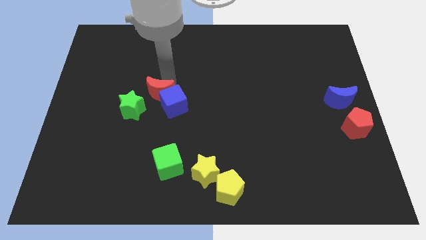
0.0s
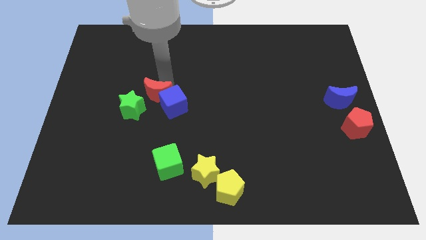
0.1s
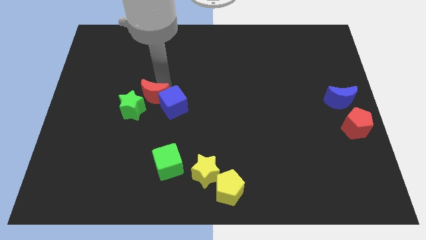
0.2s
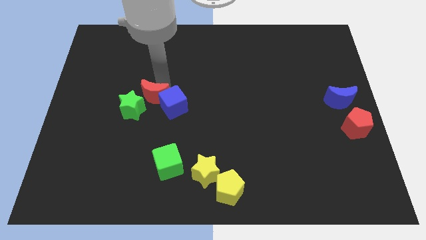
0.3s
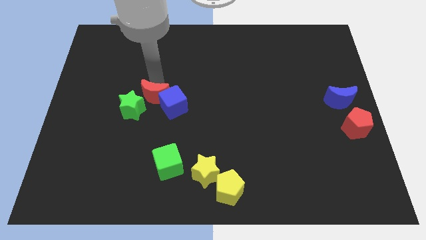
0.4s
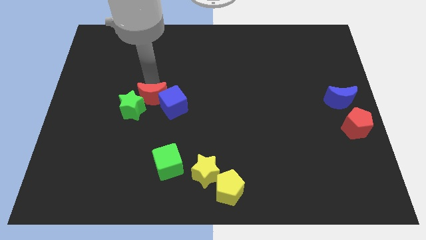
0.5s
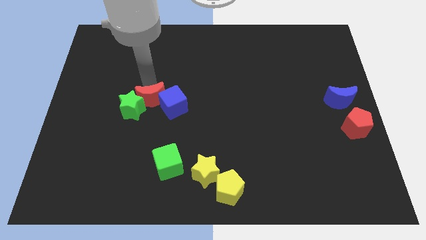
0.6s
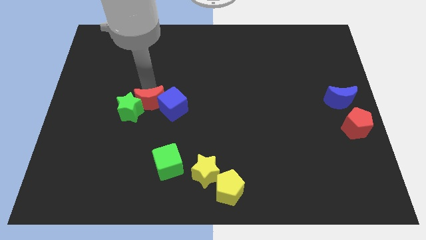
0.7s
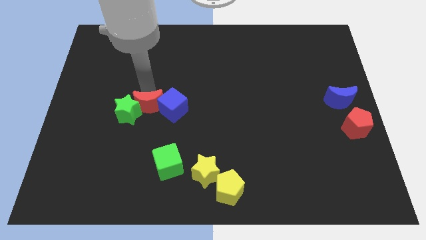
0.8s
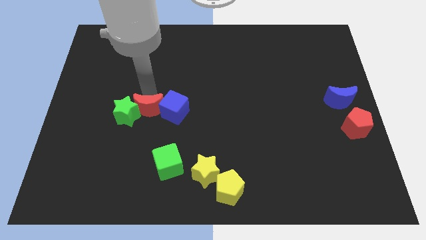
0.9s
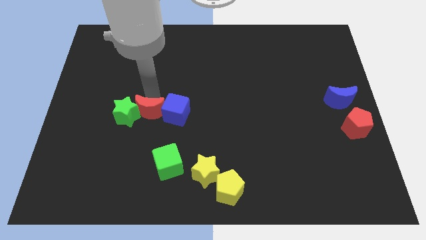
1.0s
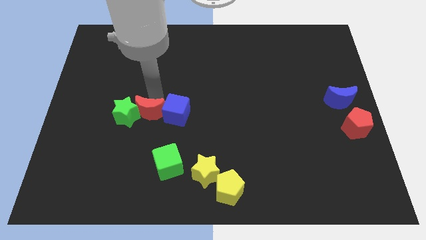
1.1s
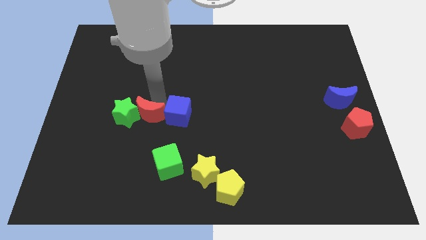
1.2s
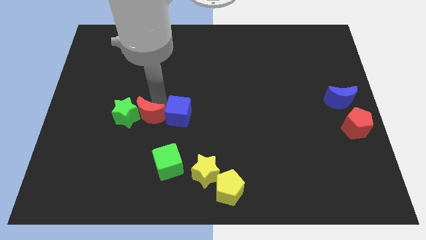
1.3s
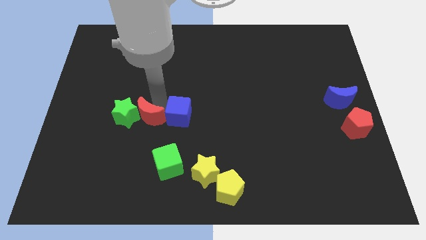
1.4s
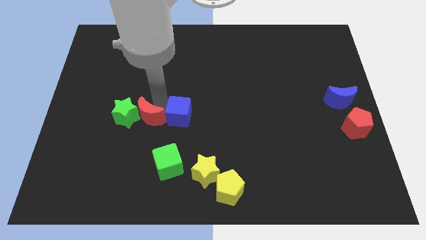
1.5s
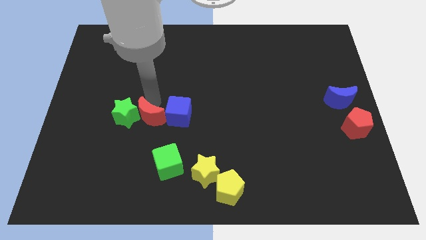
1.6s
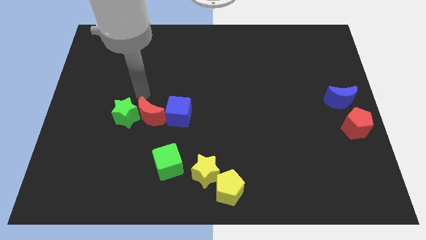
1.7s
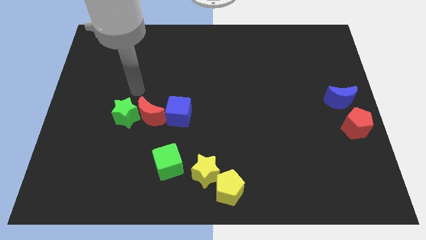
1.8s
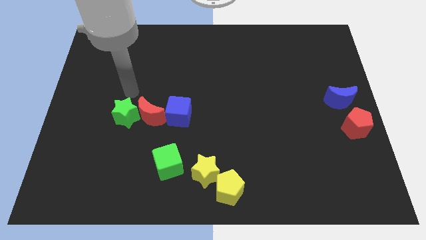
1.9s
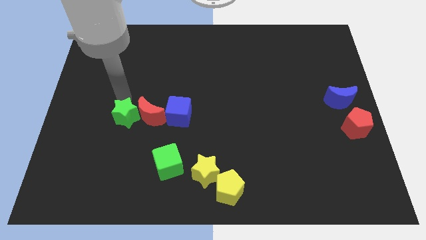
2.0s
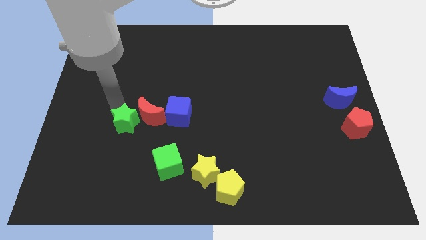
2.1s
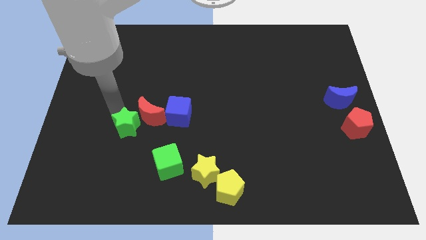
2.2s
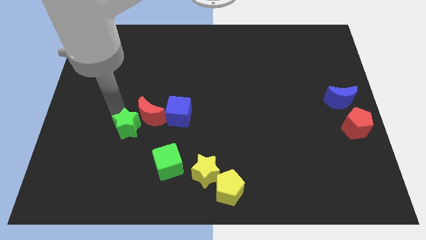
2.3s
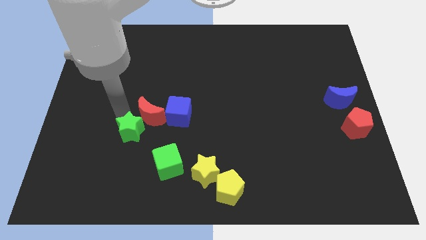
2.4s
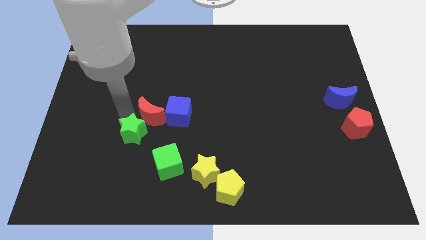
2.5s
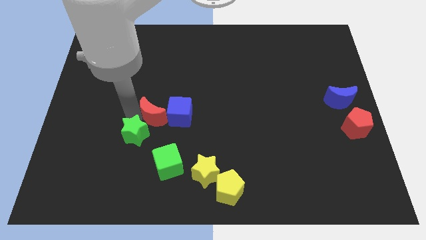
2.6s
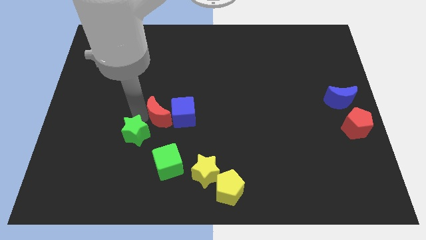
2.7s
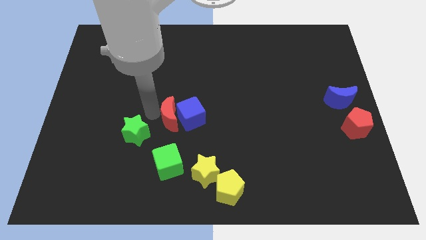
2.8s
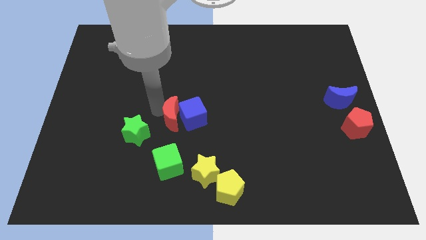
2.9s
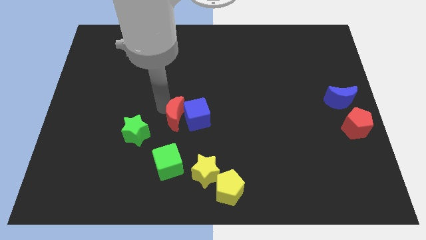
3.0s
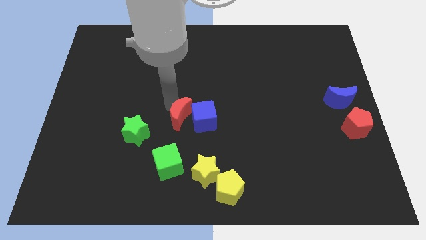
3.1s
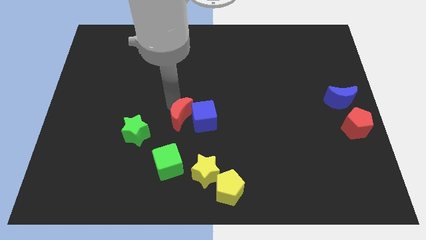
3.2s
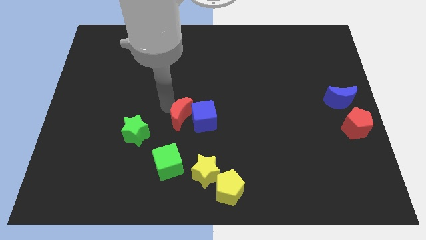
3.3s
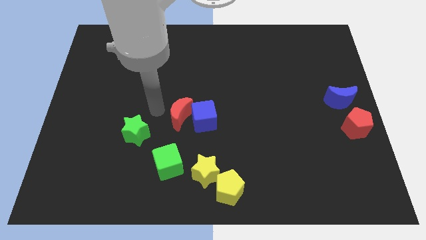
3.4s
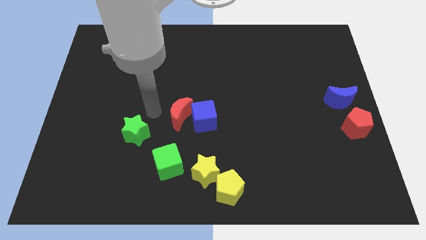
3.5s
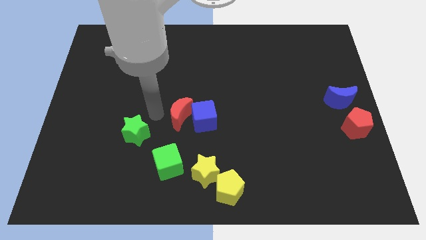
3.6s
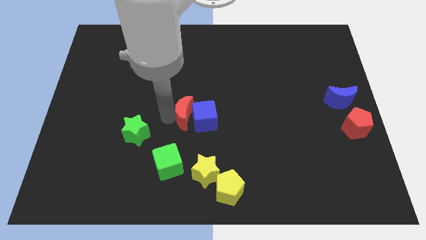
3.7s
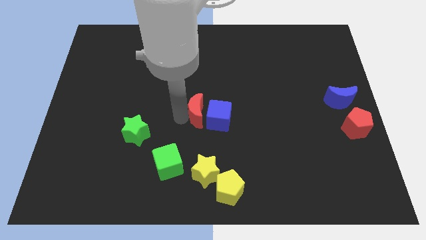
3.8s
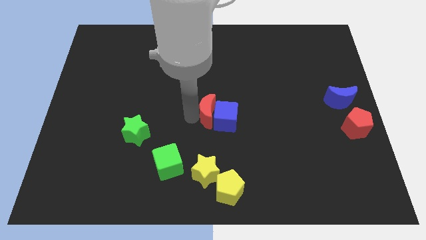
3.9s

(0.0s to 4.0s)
push the red crescent away from the green star

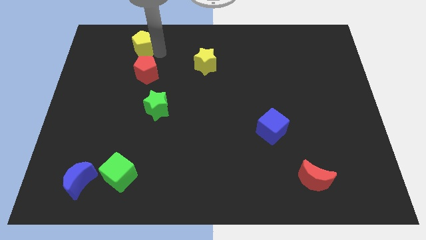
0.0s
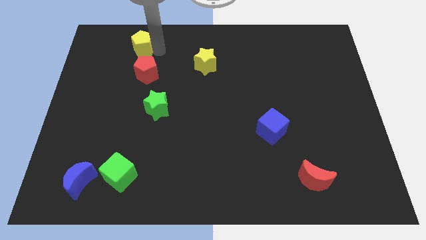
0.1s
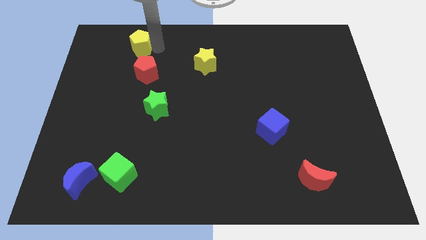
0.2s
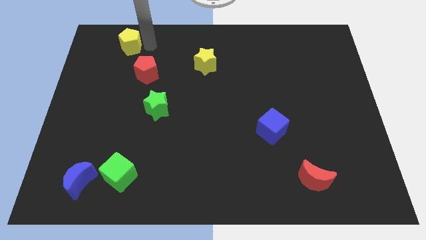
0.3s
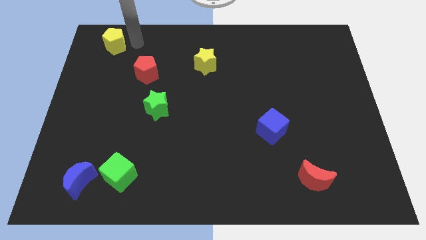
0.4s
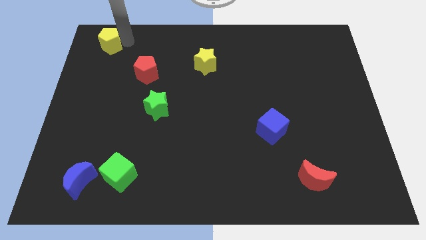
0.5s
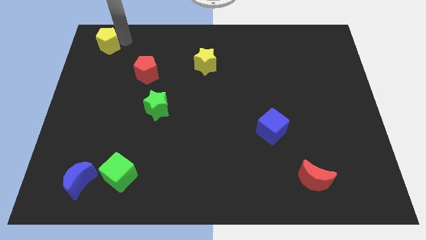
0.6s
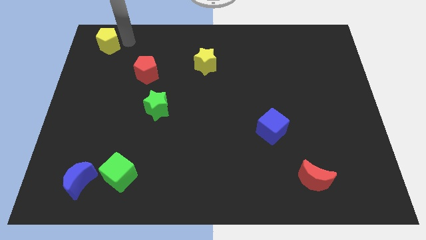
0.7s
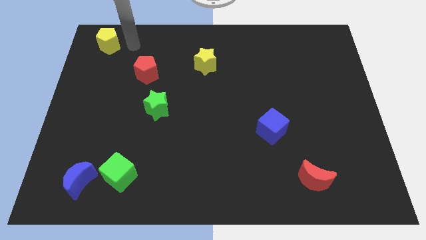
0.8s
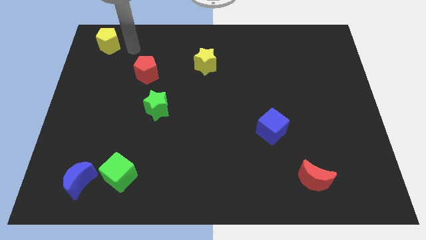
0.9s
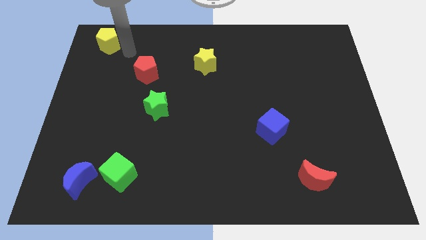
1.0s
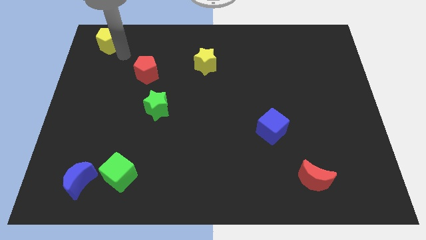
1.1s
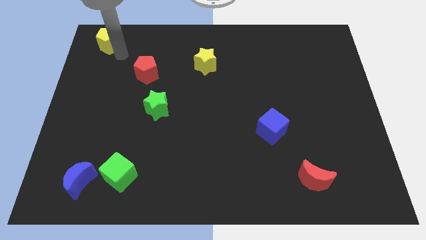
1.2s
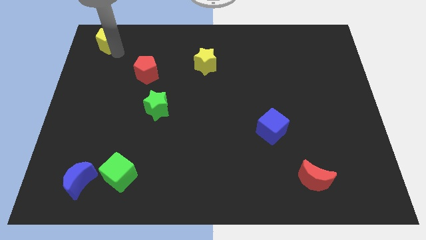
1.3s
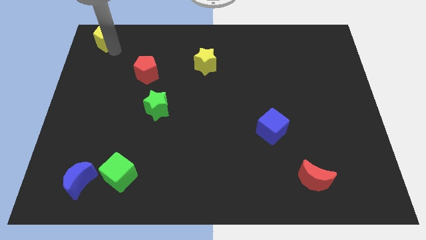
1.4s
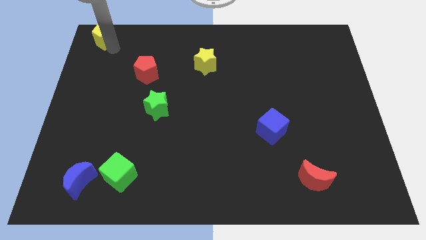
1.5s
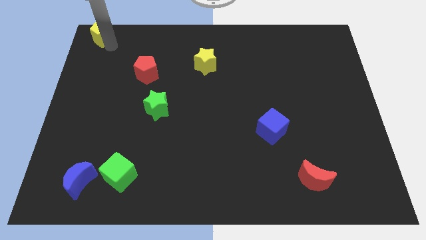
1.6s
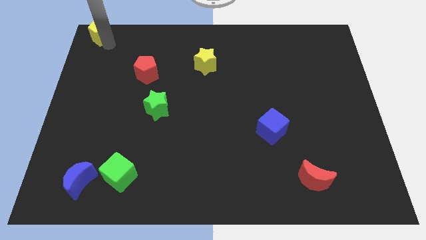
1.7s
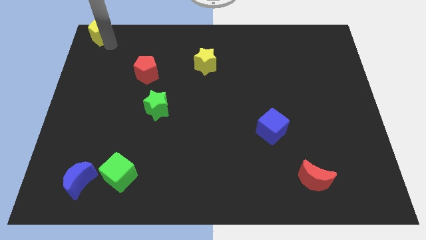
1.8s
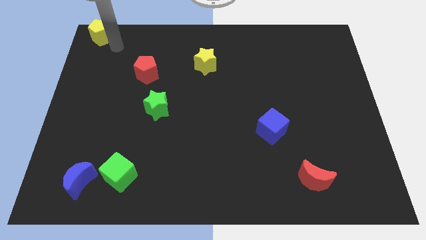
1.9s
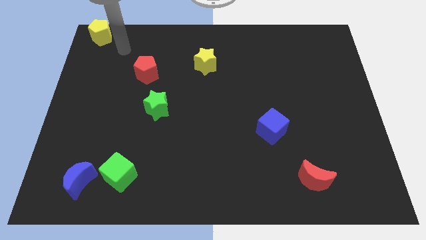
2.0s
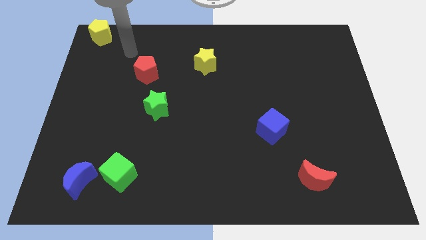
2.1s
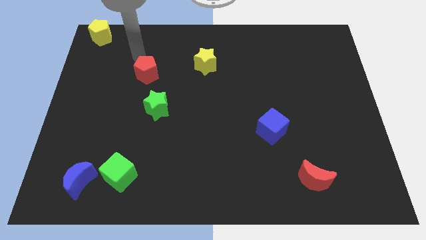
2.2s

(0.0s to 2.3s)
move the yellow pentagon to the top left corner

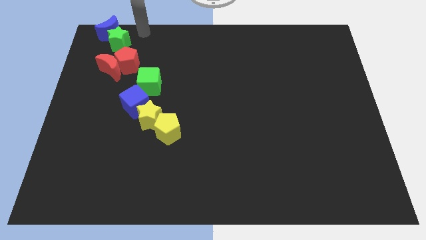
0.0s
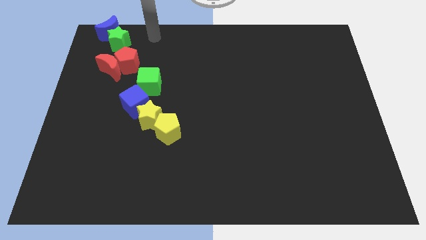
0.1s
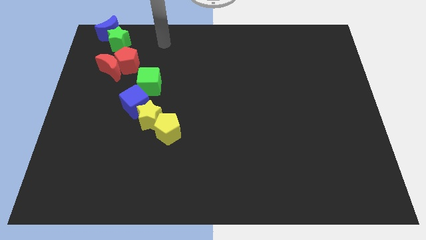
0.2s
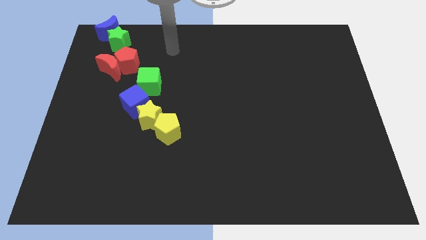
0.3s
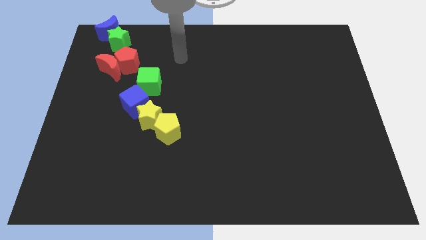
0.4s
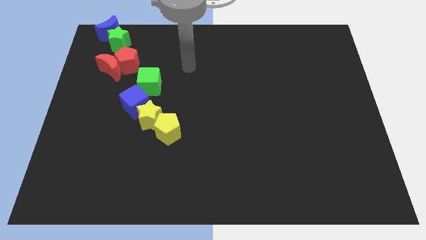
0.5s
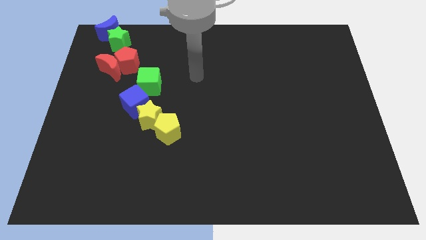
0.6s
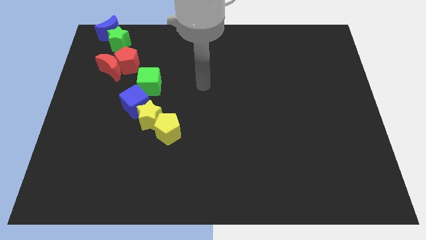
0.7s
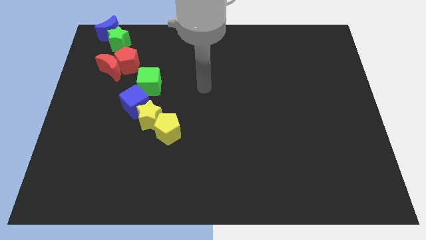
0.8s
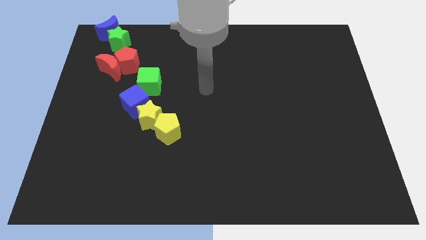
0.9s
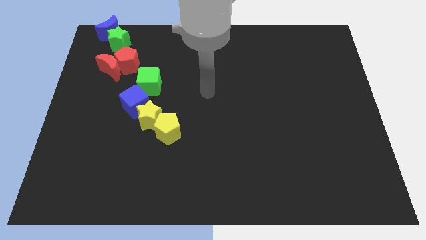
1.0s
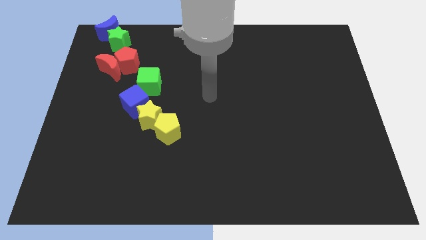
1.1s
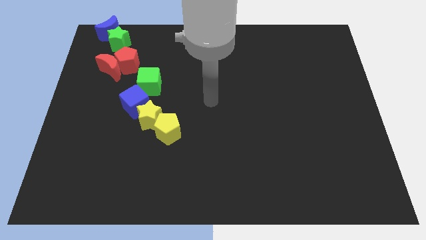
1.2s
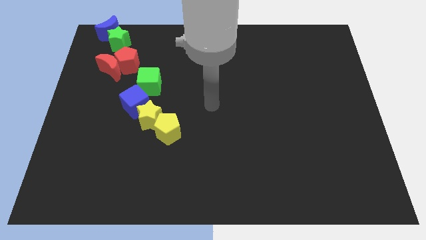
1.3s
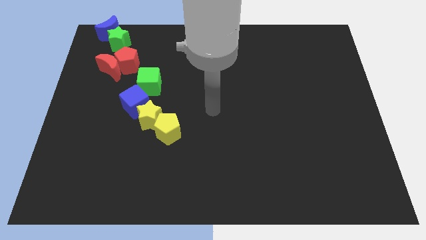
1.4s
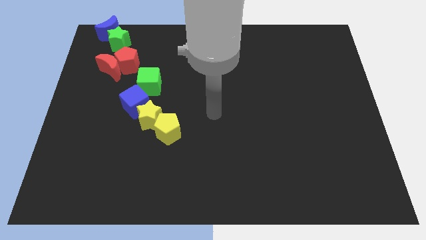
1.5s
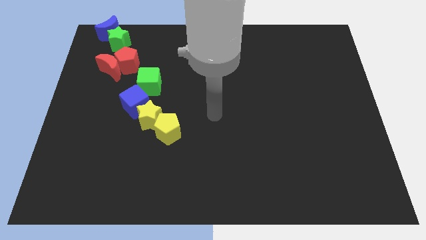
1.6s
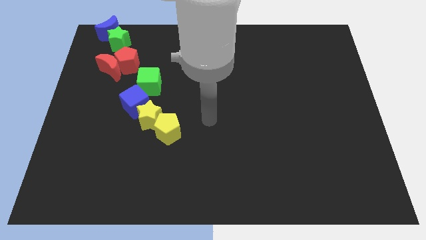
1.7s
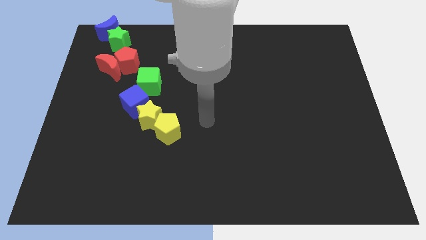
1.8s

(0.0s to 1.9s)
point the arm to the right of the yellow pentagon

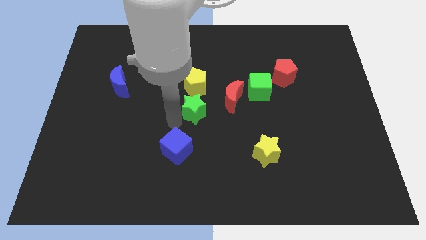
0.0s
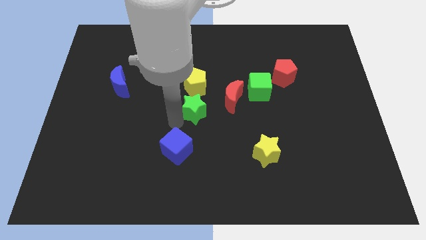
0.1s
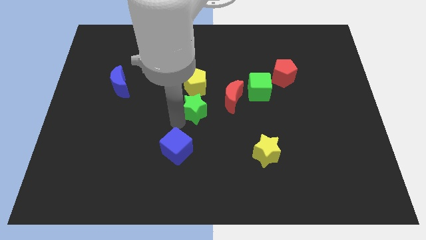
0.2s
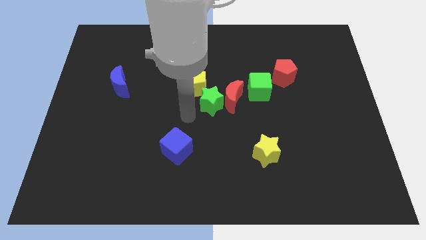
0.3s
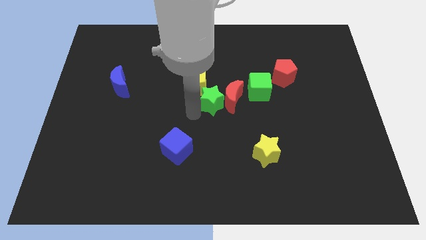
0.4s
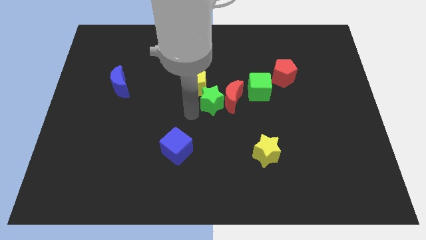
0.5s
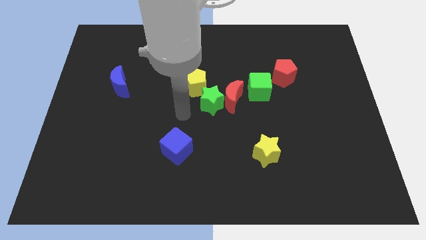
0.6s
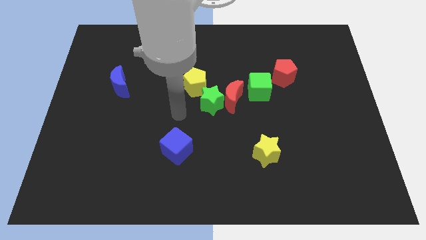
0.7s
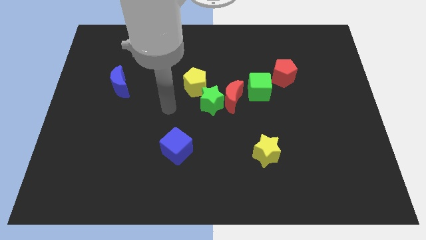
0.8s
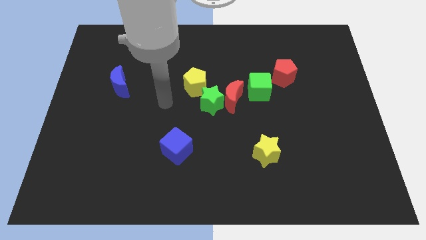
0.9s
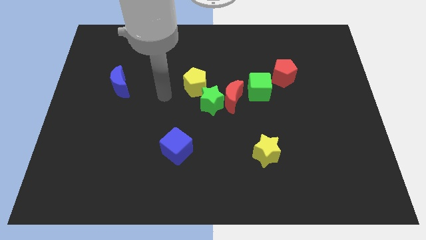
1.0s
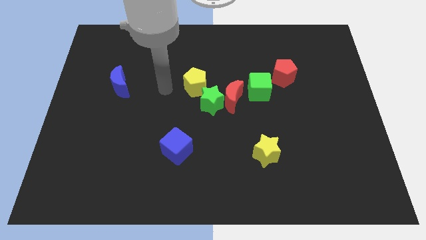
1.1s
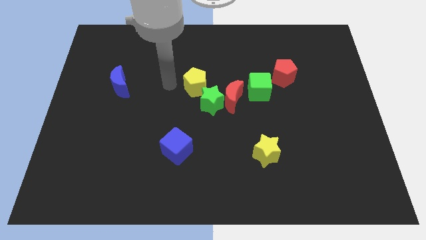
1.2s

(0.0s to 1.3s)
slightly push green star to the left of the red crescent
